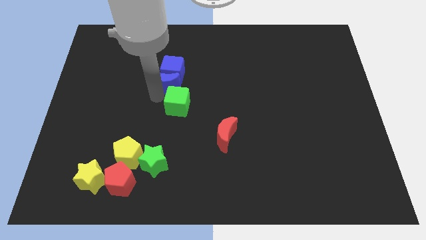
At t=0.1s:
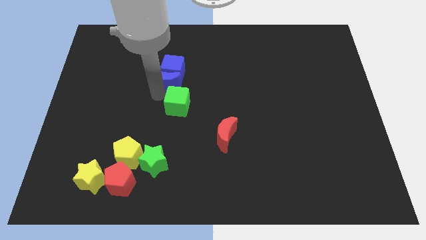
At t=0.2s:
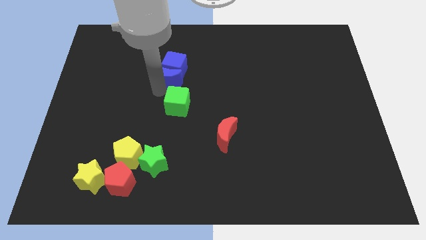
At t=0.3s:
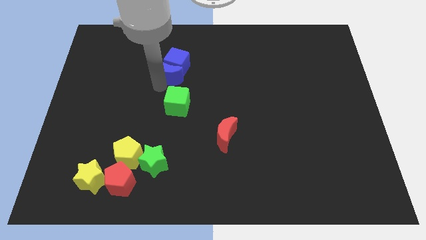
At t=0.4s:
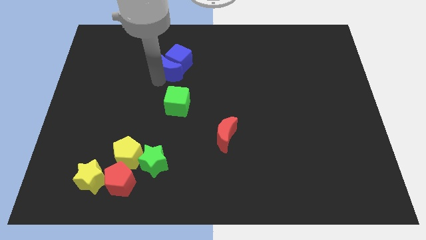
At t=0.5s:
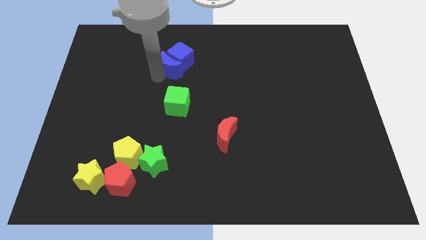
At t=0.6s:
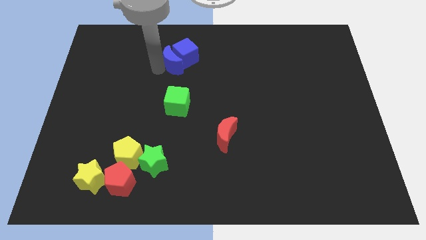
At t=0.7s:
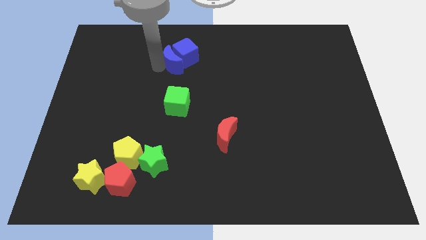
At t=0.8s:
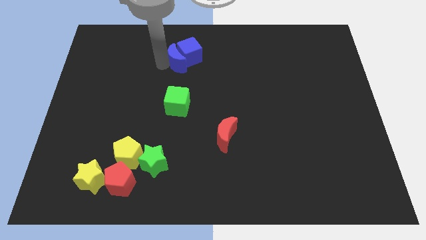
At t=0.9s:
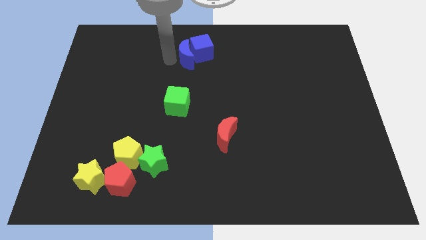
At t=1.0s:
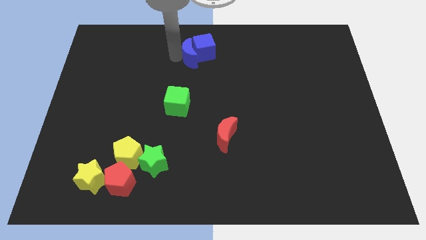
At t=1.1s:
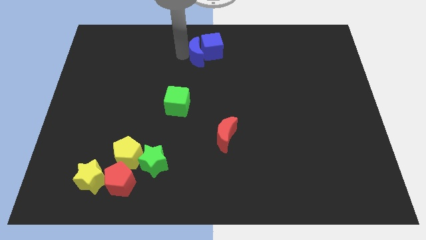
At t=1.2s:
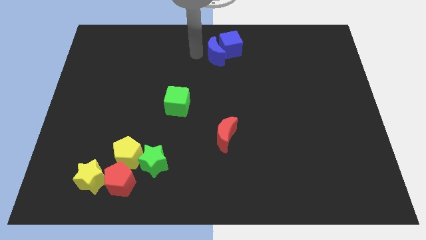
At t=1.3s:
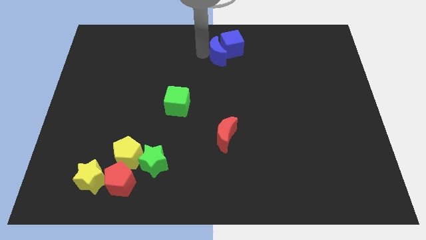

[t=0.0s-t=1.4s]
put the blue cube and crescent above the red crescent

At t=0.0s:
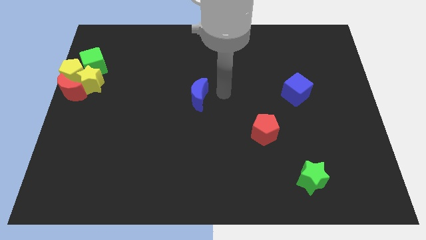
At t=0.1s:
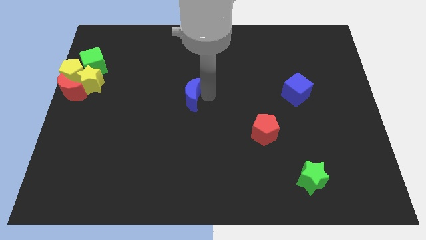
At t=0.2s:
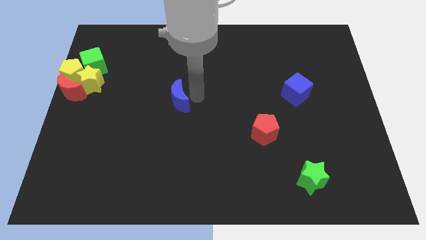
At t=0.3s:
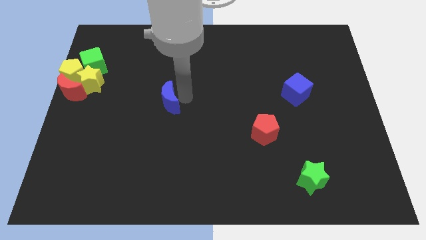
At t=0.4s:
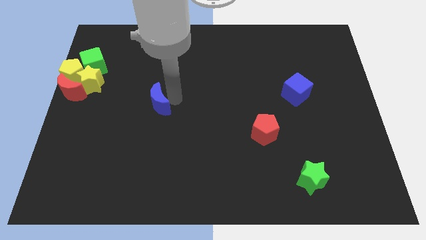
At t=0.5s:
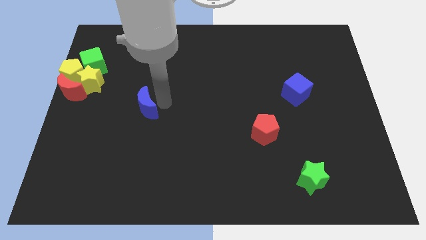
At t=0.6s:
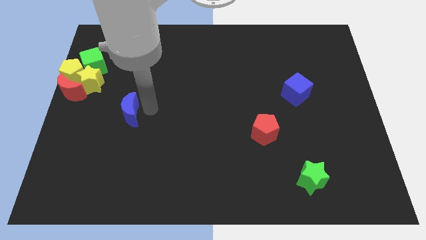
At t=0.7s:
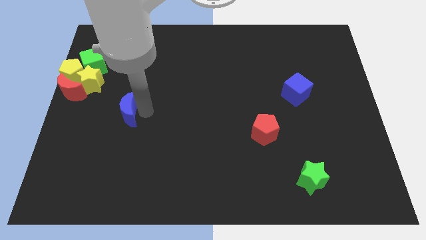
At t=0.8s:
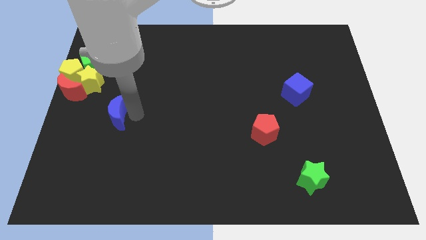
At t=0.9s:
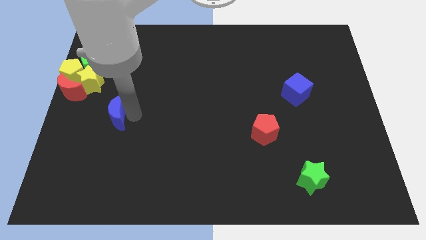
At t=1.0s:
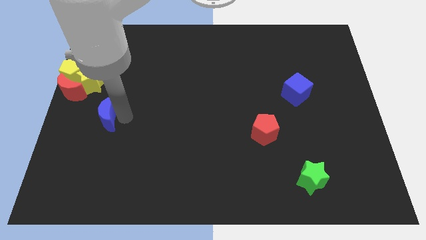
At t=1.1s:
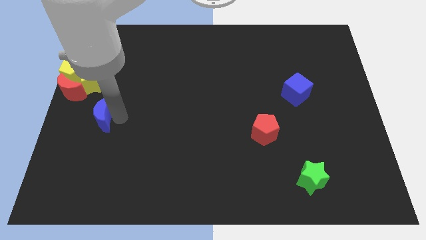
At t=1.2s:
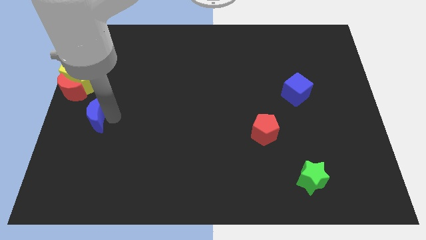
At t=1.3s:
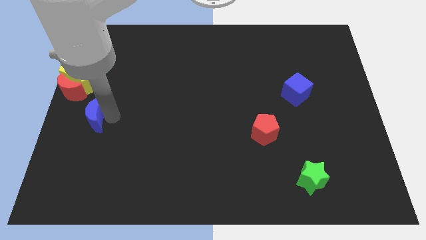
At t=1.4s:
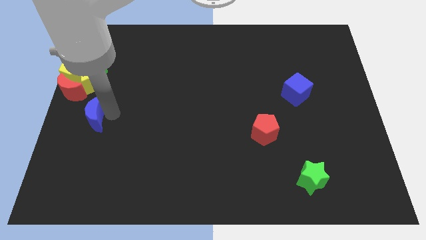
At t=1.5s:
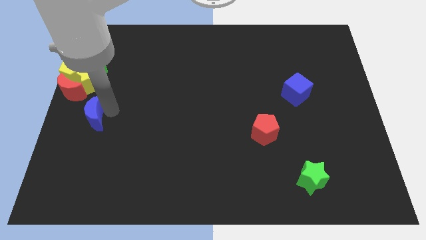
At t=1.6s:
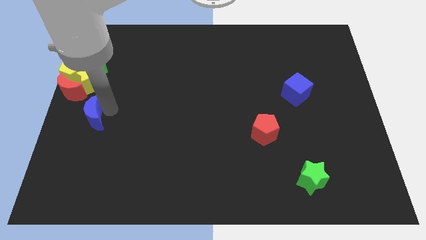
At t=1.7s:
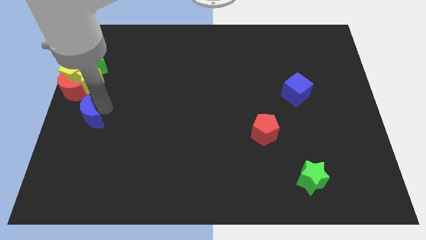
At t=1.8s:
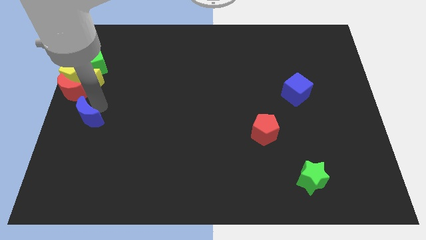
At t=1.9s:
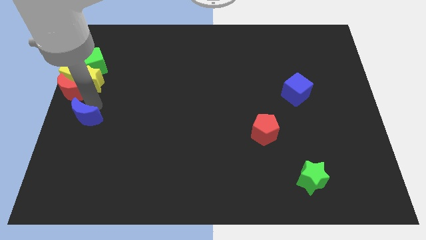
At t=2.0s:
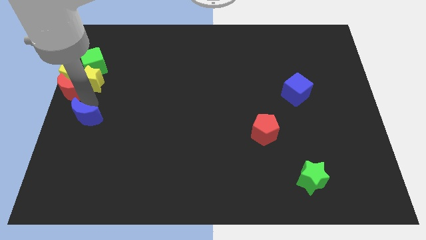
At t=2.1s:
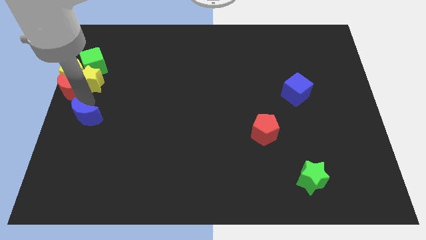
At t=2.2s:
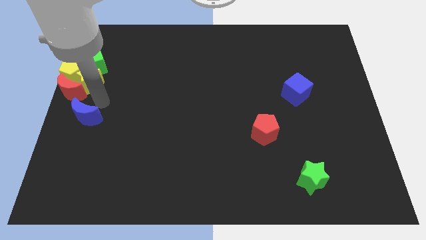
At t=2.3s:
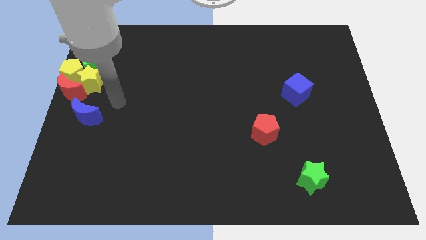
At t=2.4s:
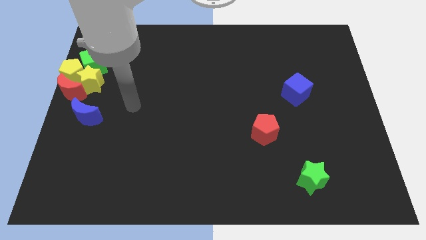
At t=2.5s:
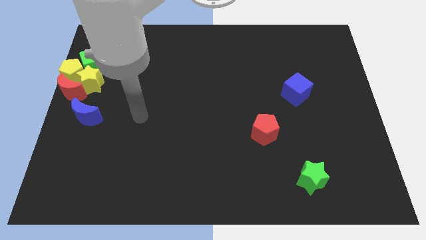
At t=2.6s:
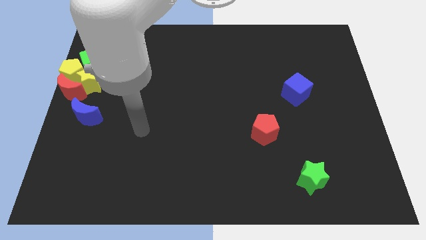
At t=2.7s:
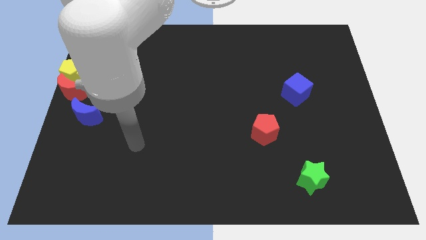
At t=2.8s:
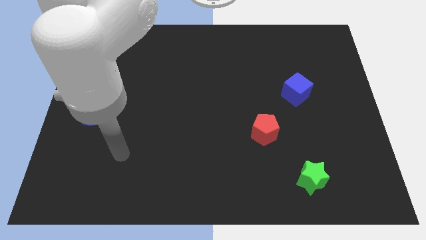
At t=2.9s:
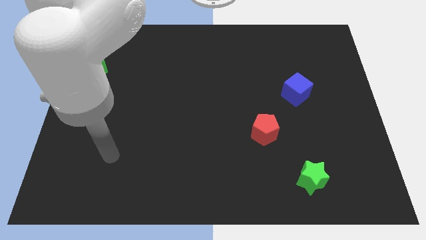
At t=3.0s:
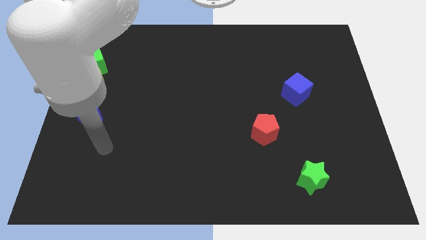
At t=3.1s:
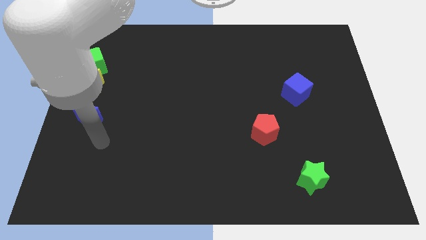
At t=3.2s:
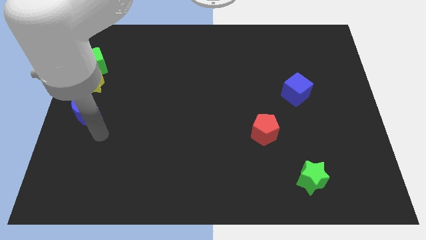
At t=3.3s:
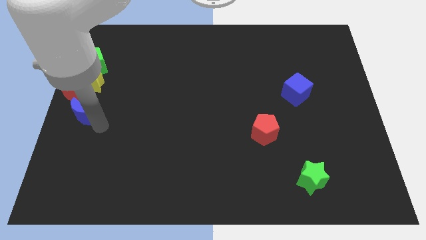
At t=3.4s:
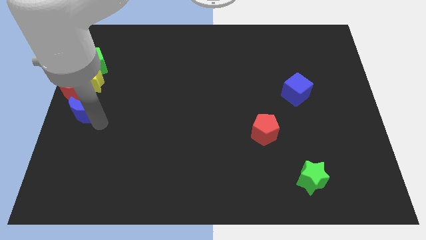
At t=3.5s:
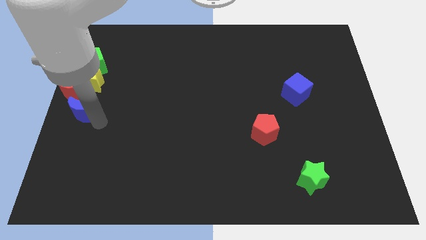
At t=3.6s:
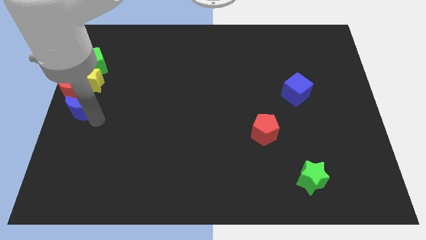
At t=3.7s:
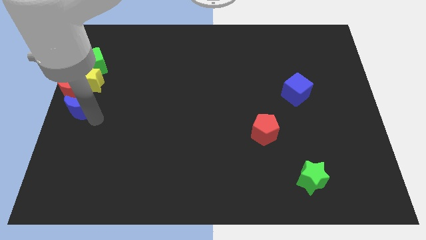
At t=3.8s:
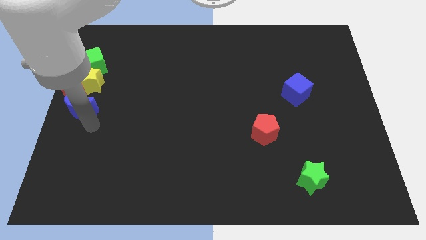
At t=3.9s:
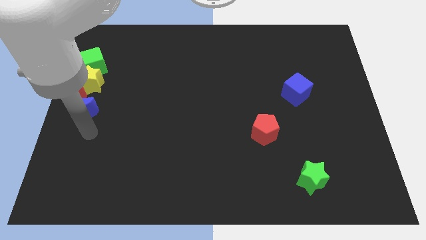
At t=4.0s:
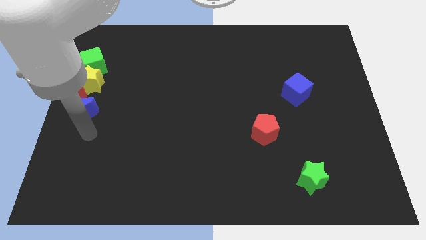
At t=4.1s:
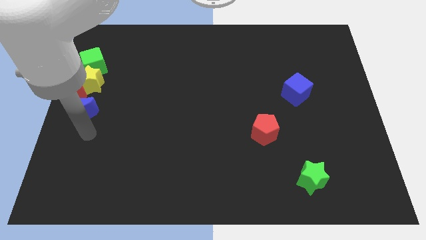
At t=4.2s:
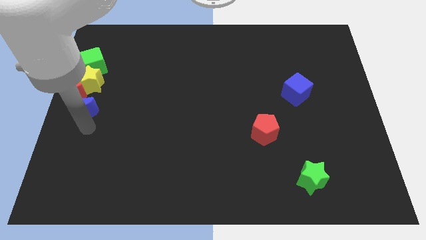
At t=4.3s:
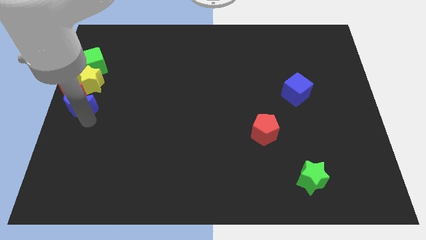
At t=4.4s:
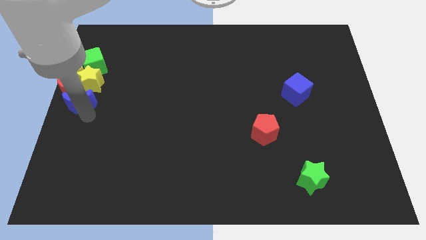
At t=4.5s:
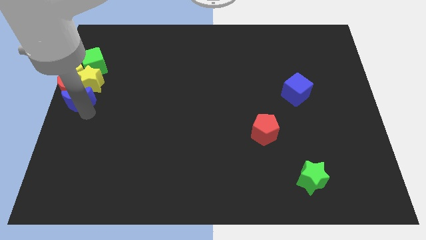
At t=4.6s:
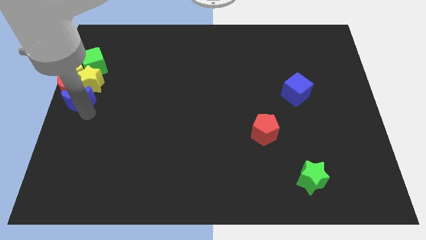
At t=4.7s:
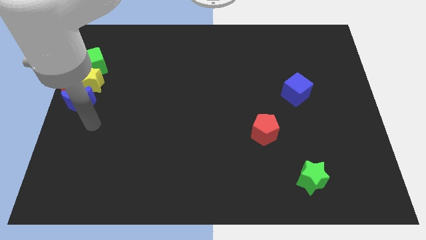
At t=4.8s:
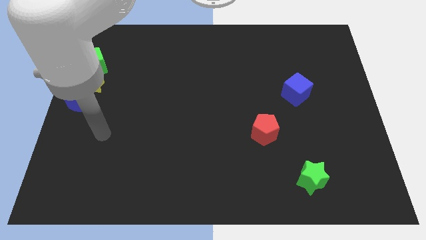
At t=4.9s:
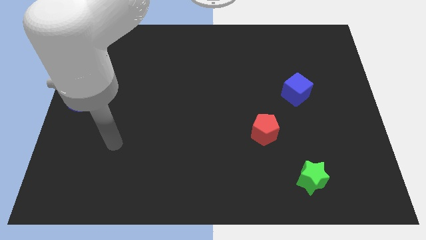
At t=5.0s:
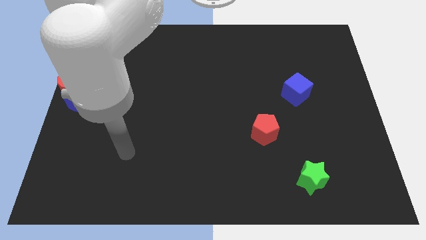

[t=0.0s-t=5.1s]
move the blue moon into group of blocks

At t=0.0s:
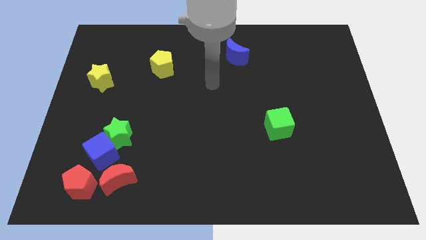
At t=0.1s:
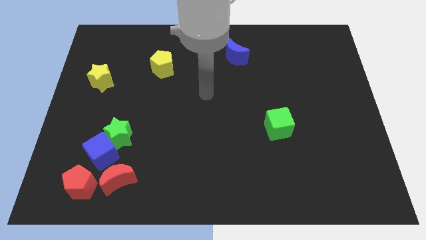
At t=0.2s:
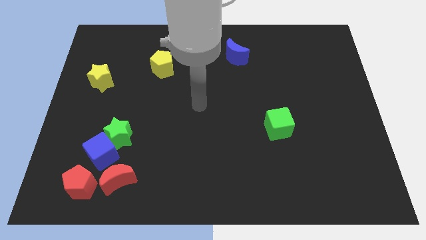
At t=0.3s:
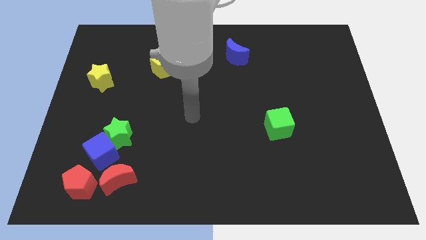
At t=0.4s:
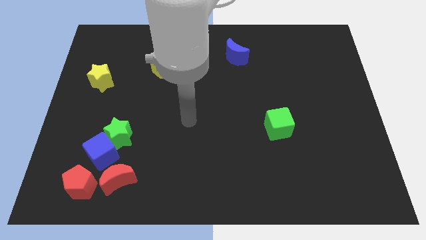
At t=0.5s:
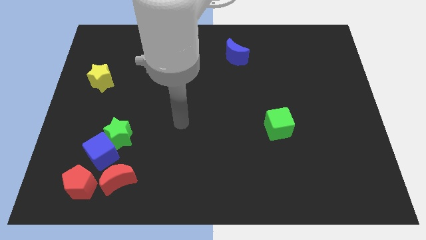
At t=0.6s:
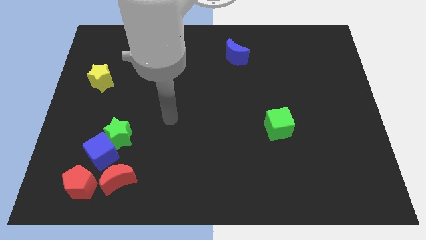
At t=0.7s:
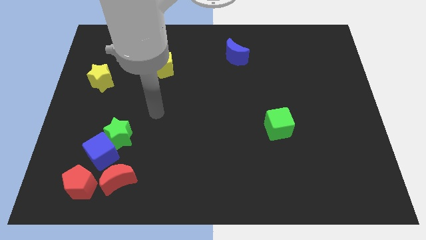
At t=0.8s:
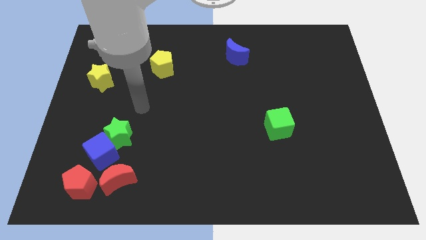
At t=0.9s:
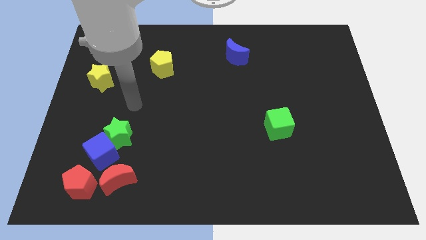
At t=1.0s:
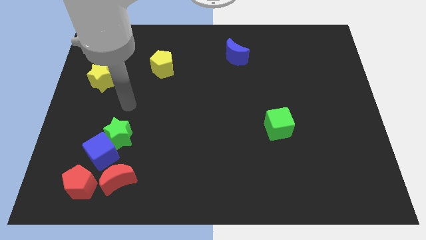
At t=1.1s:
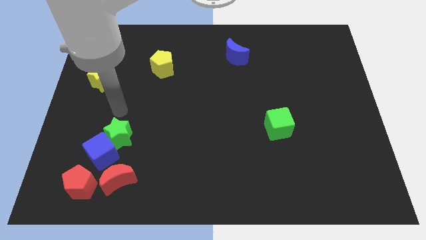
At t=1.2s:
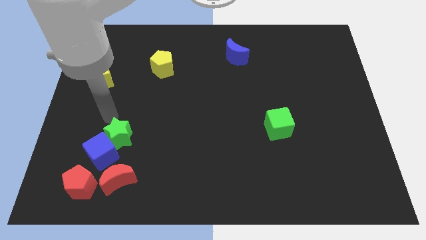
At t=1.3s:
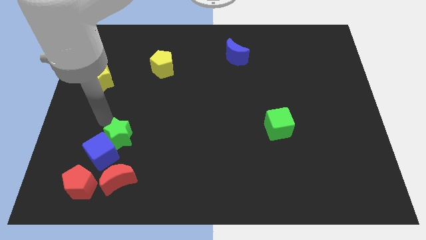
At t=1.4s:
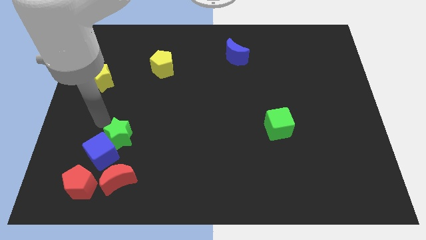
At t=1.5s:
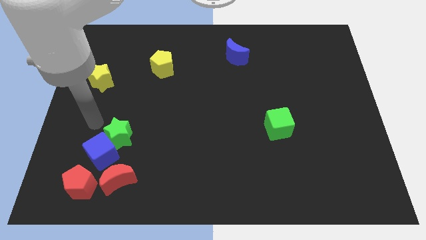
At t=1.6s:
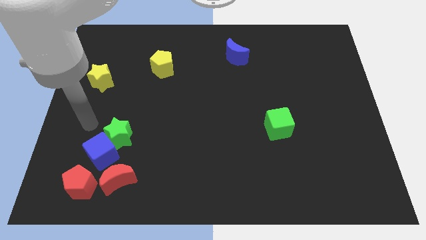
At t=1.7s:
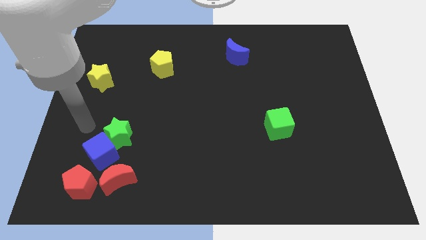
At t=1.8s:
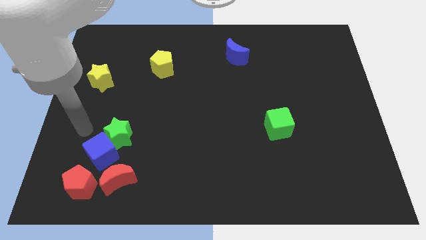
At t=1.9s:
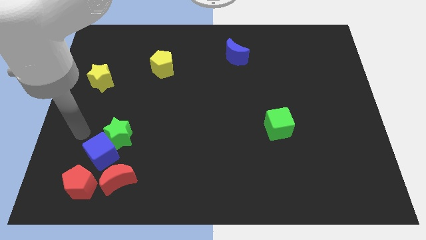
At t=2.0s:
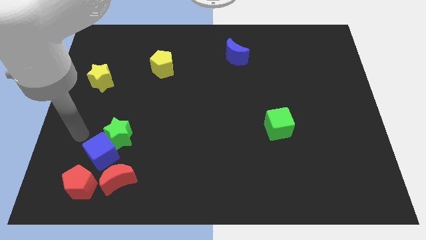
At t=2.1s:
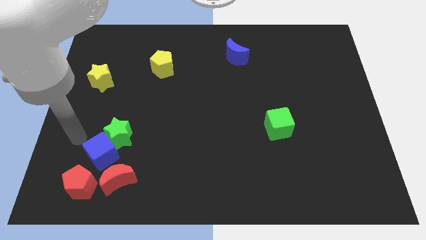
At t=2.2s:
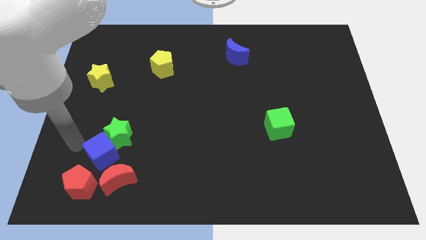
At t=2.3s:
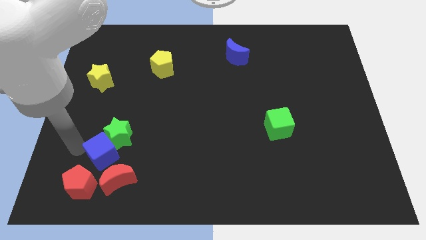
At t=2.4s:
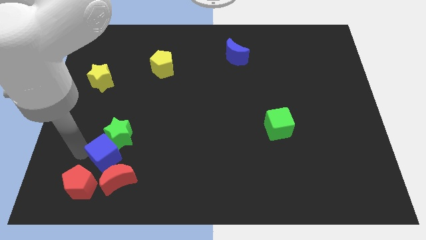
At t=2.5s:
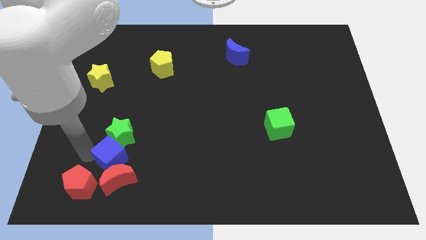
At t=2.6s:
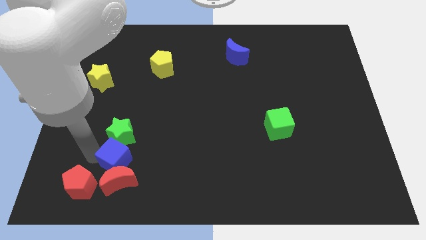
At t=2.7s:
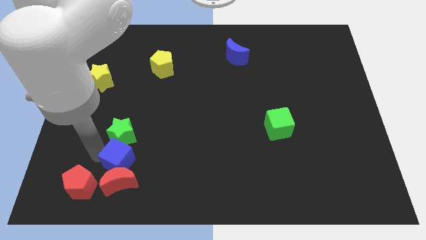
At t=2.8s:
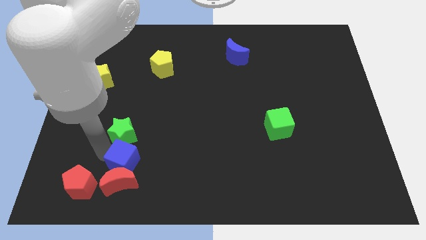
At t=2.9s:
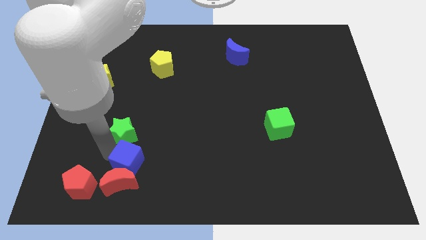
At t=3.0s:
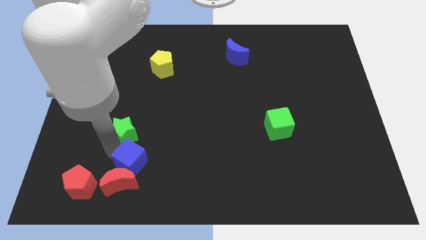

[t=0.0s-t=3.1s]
slide blue cube into green star and red moon
